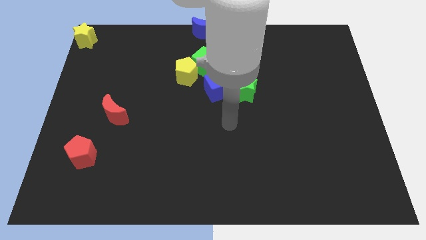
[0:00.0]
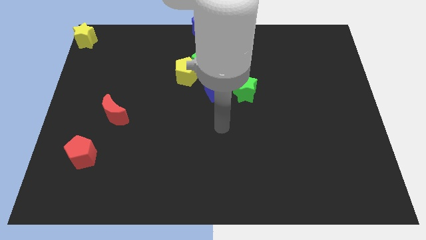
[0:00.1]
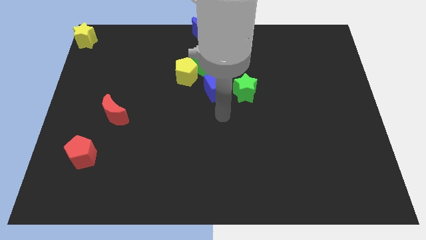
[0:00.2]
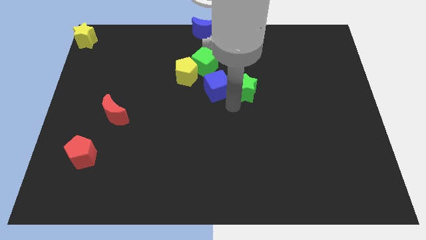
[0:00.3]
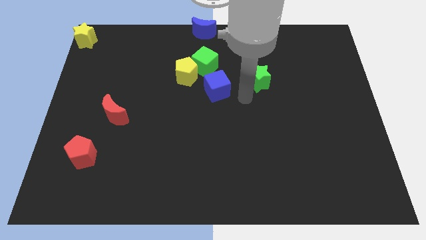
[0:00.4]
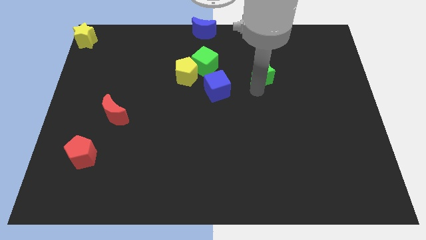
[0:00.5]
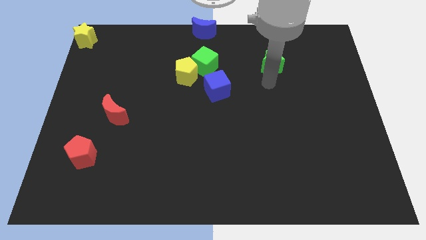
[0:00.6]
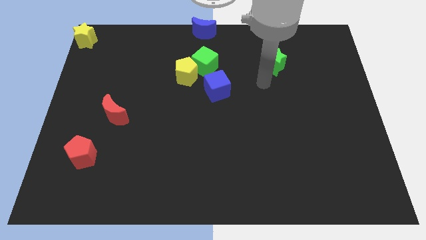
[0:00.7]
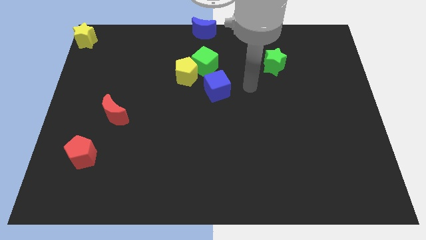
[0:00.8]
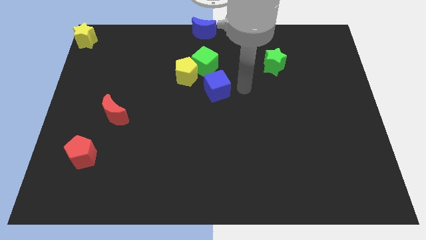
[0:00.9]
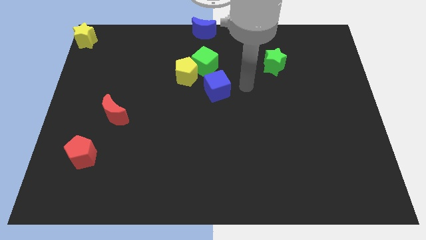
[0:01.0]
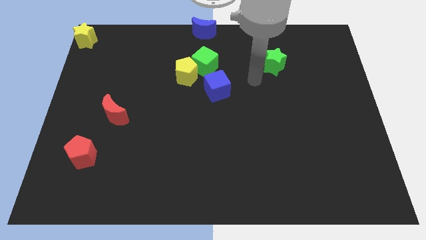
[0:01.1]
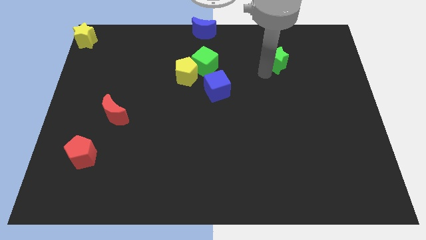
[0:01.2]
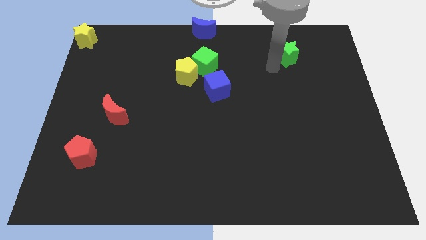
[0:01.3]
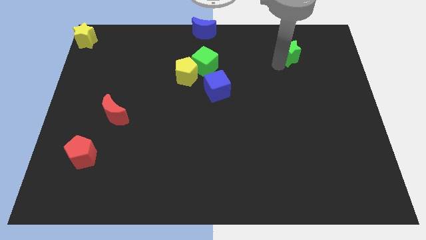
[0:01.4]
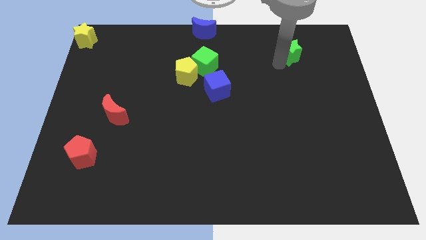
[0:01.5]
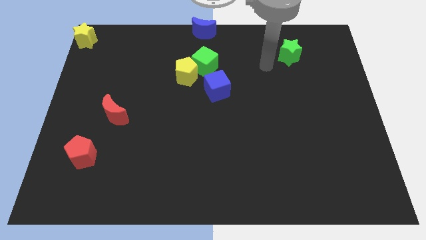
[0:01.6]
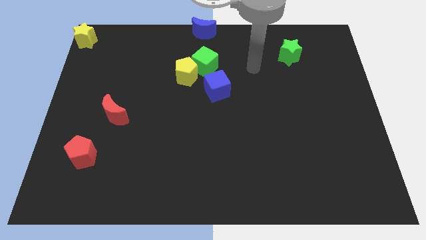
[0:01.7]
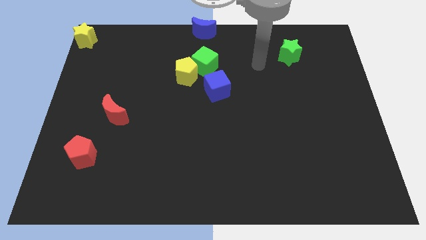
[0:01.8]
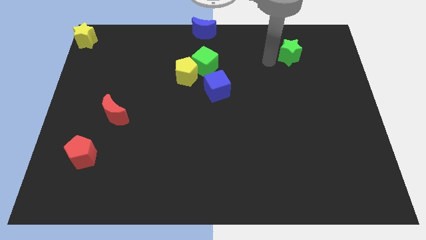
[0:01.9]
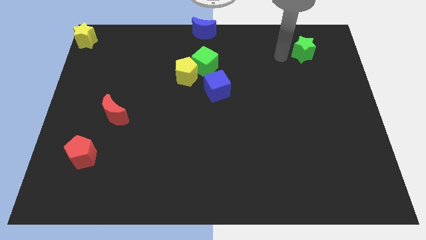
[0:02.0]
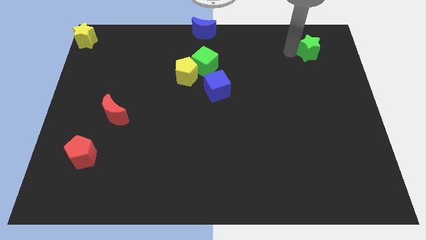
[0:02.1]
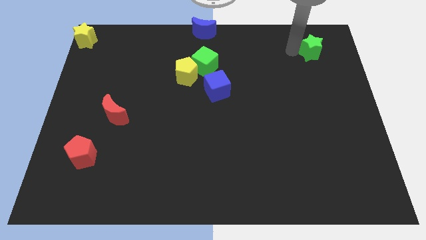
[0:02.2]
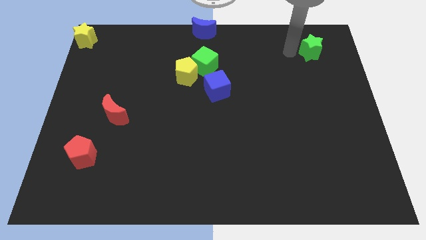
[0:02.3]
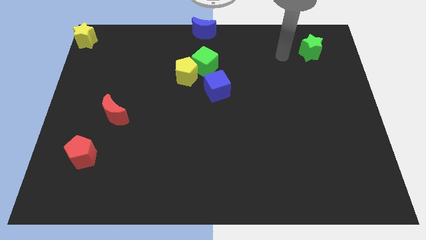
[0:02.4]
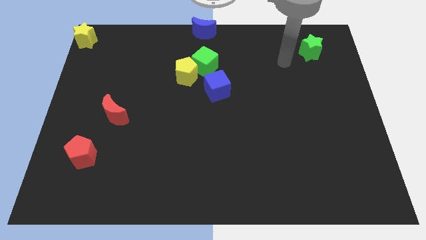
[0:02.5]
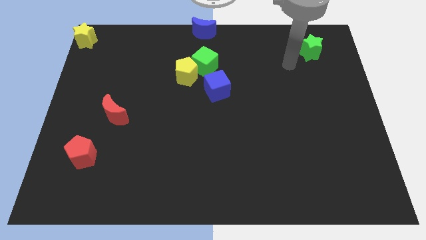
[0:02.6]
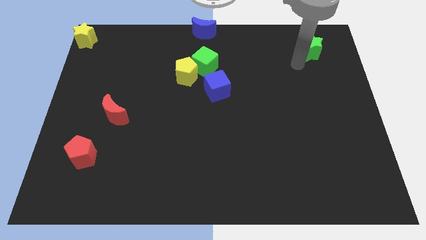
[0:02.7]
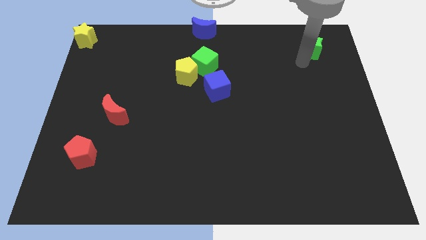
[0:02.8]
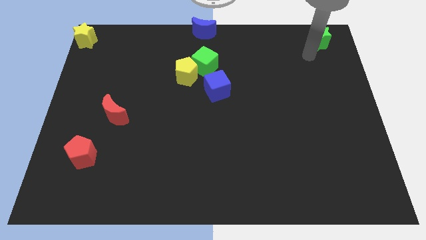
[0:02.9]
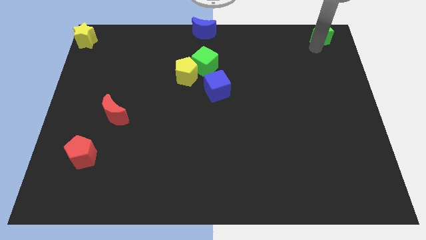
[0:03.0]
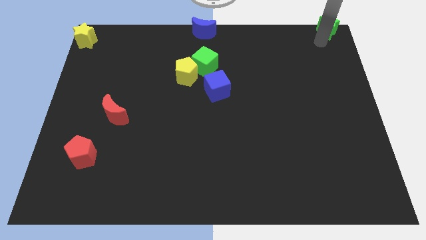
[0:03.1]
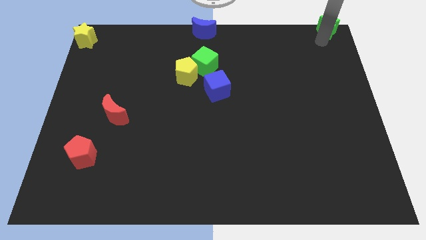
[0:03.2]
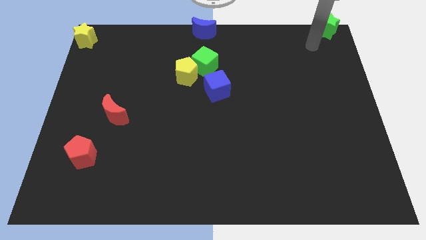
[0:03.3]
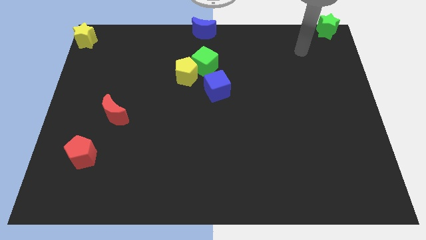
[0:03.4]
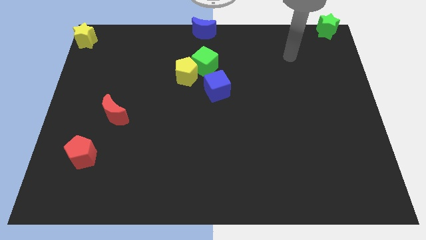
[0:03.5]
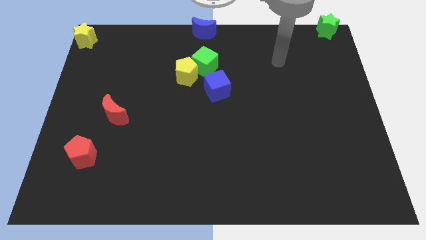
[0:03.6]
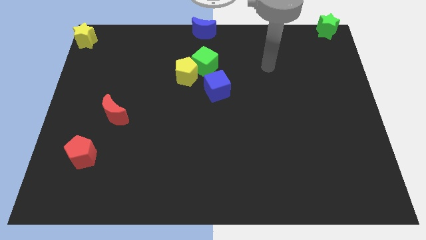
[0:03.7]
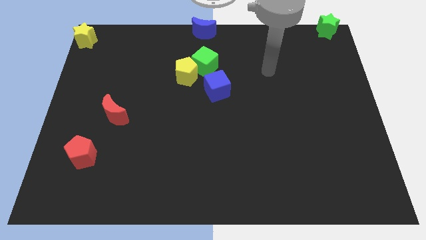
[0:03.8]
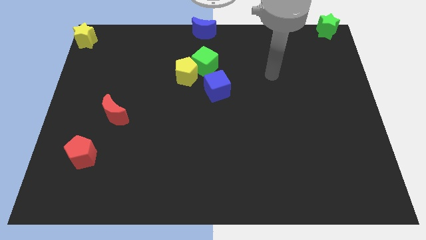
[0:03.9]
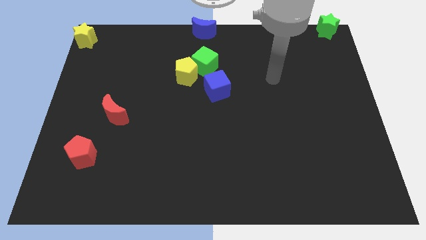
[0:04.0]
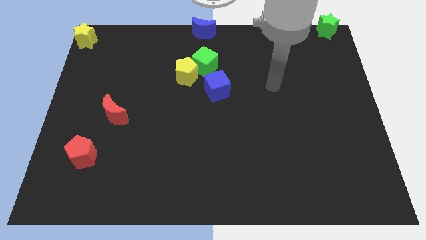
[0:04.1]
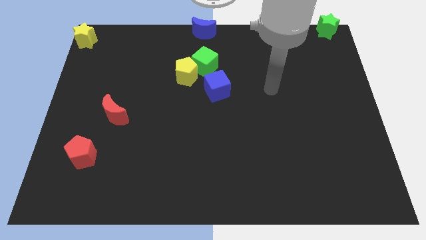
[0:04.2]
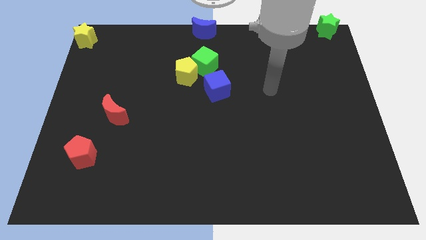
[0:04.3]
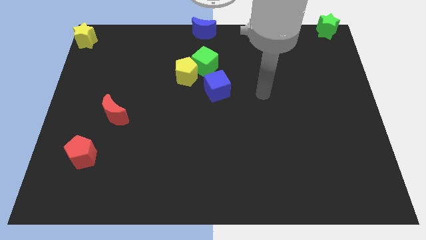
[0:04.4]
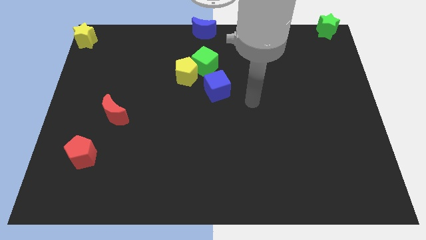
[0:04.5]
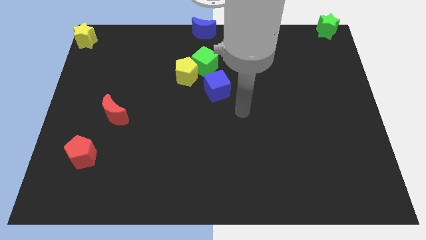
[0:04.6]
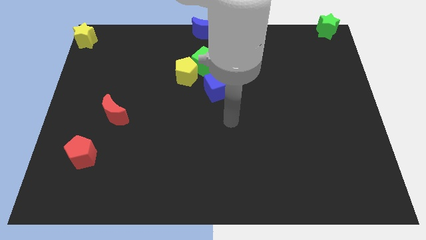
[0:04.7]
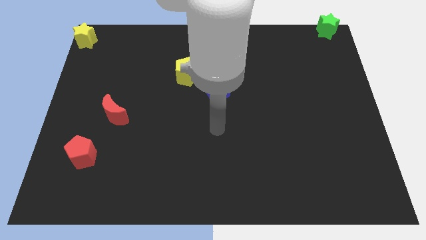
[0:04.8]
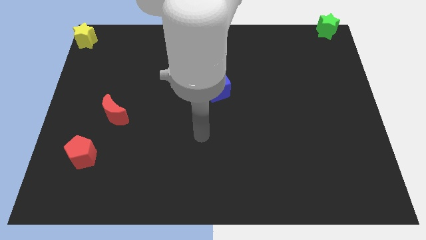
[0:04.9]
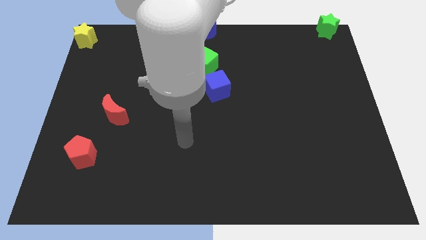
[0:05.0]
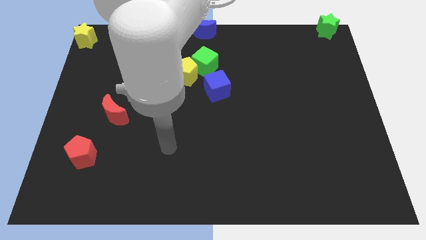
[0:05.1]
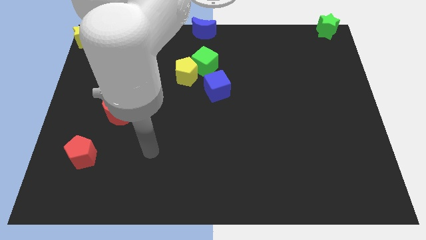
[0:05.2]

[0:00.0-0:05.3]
move the green star to the top right of board

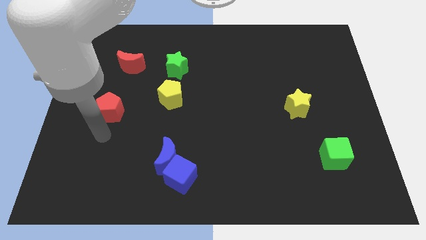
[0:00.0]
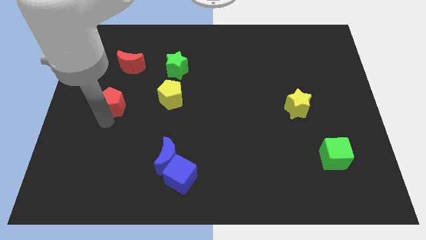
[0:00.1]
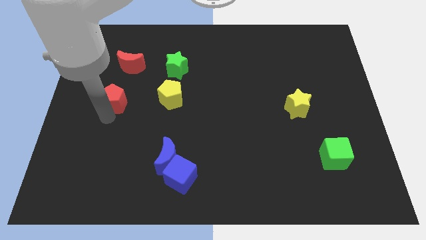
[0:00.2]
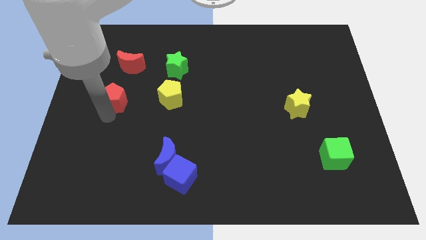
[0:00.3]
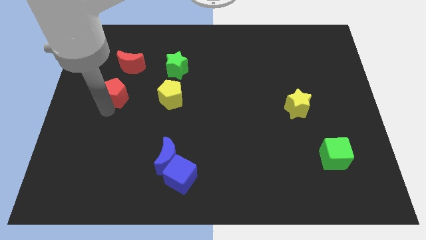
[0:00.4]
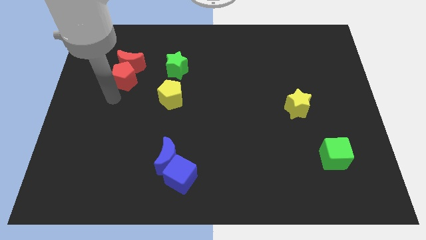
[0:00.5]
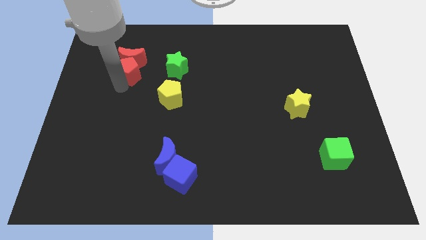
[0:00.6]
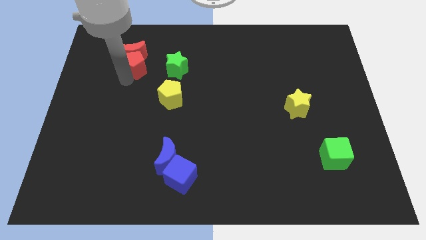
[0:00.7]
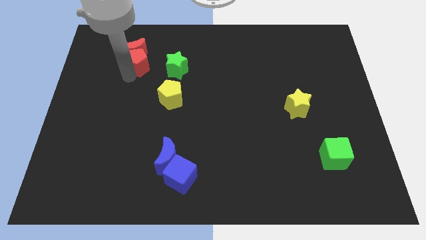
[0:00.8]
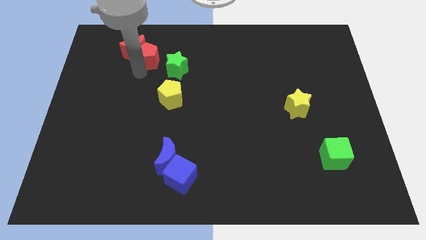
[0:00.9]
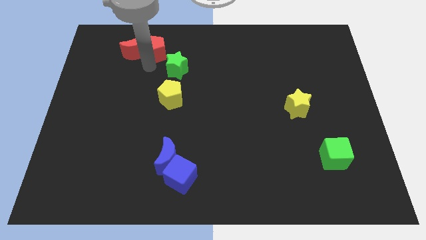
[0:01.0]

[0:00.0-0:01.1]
push red pentagon into red moon

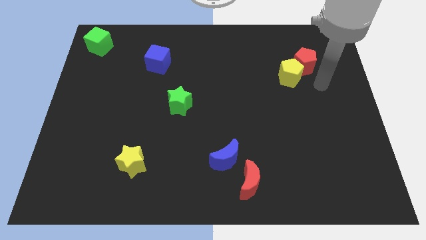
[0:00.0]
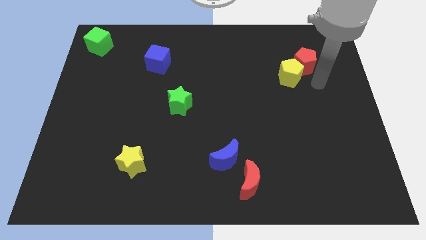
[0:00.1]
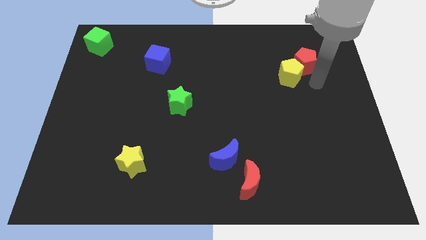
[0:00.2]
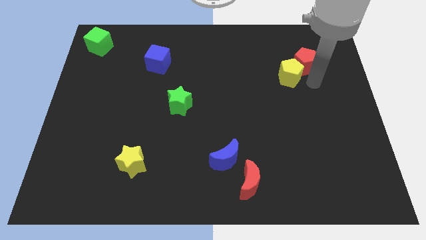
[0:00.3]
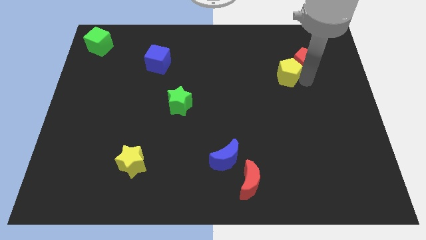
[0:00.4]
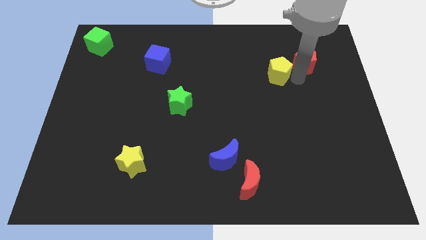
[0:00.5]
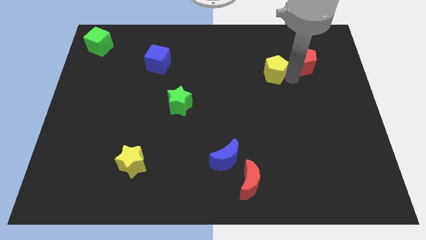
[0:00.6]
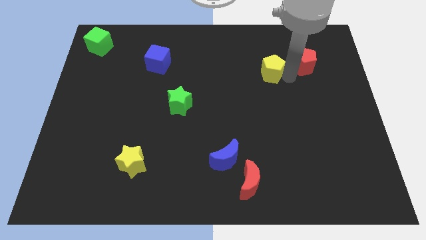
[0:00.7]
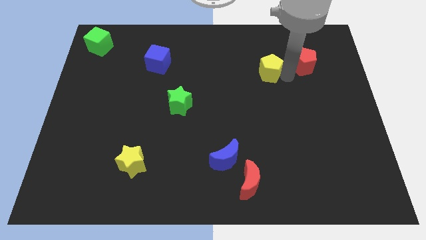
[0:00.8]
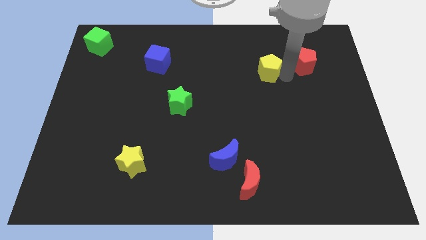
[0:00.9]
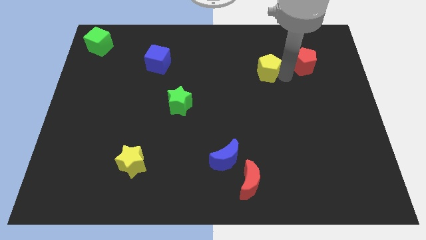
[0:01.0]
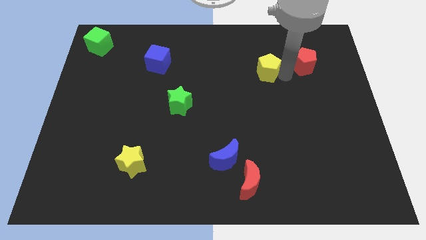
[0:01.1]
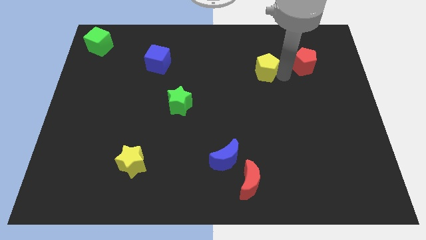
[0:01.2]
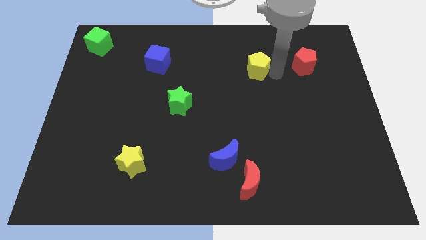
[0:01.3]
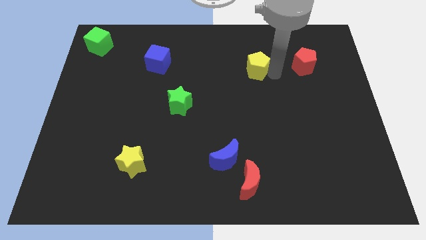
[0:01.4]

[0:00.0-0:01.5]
move yellow pentagon to the left of red pentagon

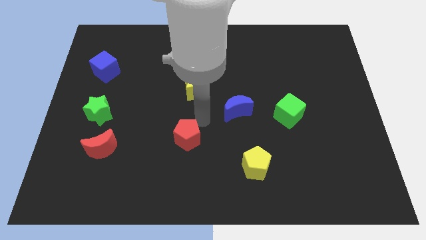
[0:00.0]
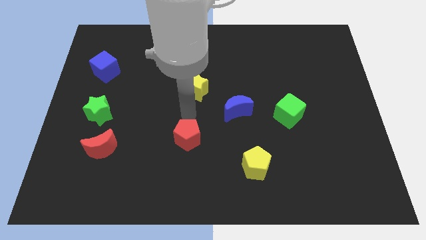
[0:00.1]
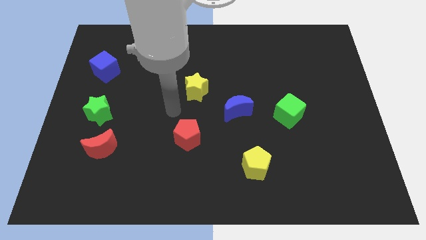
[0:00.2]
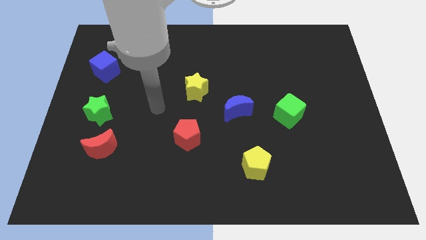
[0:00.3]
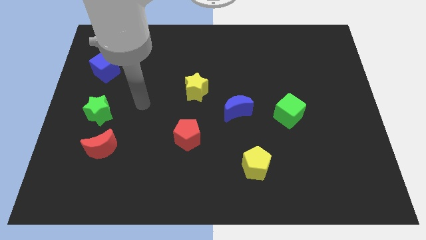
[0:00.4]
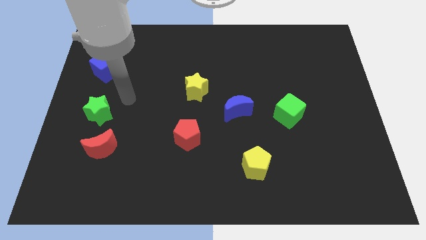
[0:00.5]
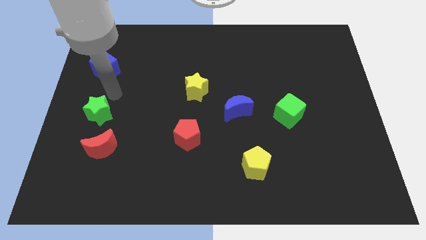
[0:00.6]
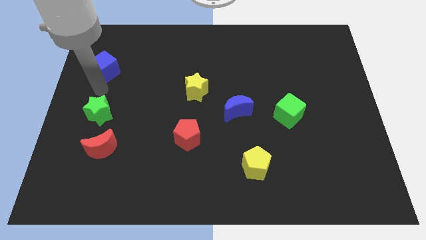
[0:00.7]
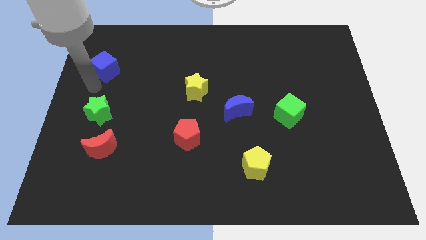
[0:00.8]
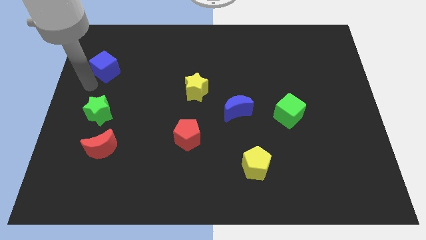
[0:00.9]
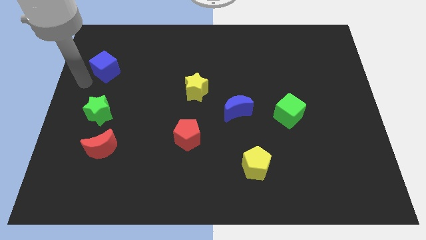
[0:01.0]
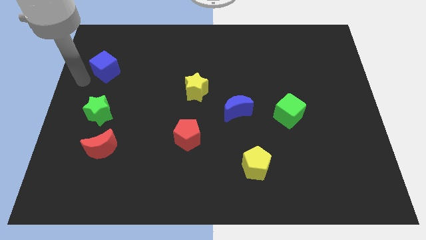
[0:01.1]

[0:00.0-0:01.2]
push your hand from center to left side of the board
